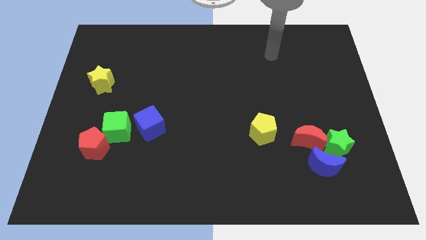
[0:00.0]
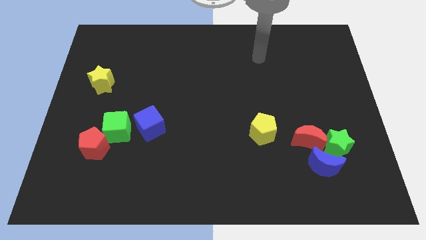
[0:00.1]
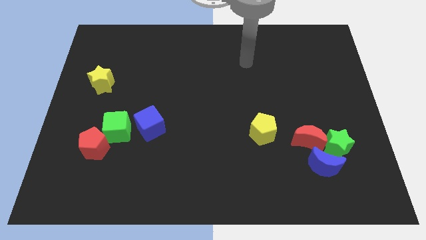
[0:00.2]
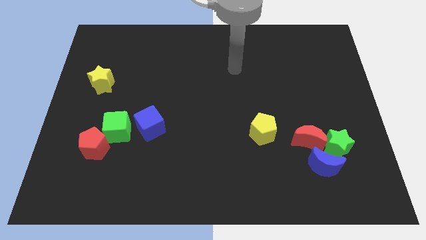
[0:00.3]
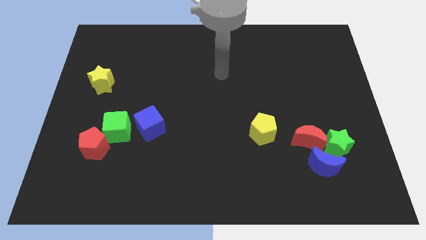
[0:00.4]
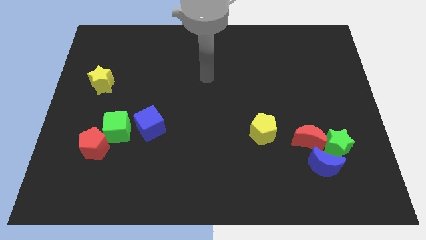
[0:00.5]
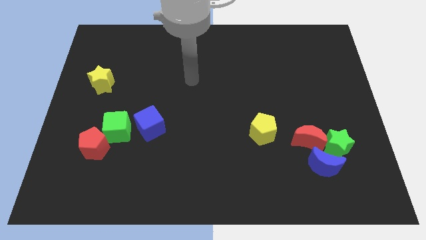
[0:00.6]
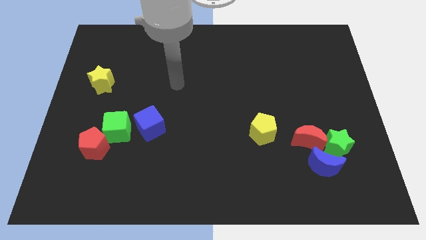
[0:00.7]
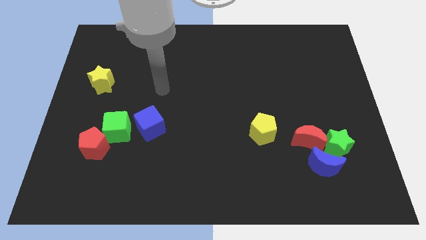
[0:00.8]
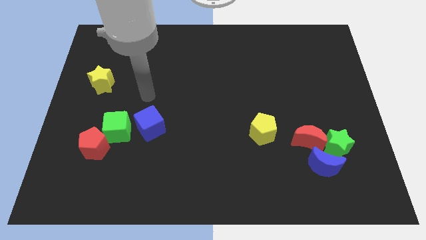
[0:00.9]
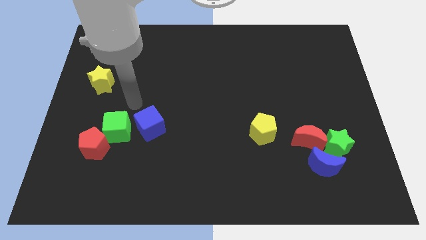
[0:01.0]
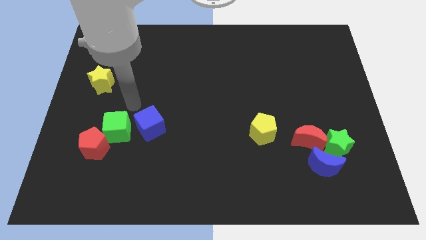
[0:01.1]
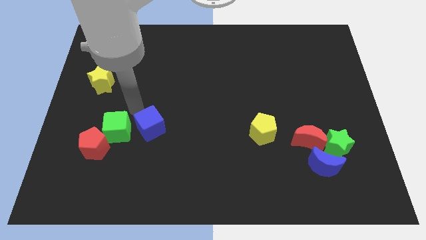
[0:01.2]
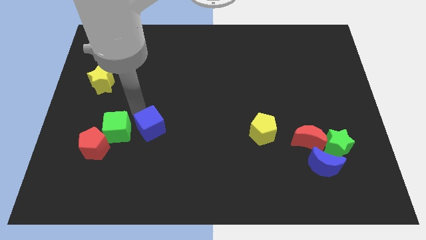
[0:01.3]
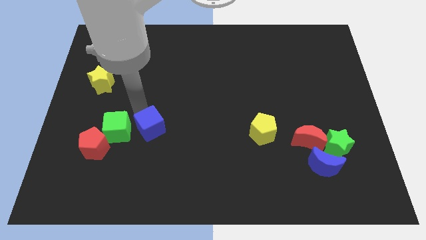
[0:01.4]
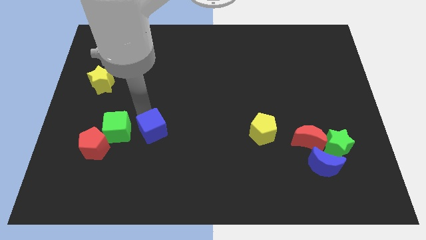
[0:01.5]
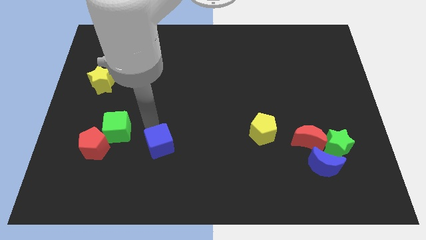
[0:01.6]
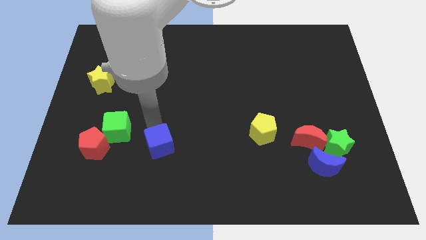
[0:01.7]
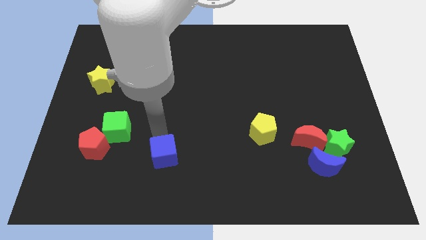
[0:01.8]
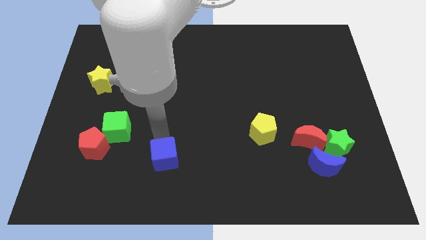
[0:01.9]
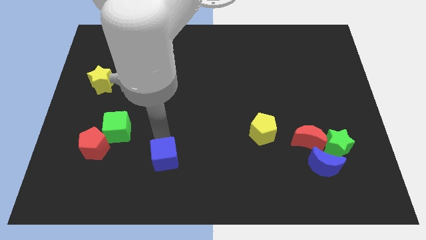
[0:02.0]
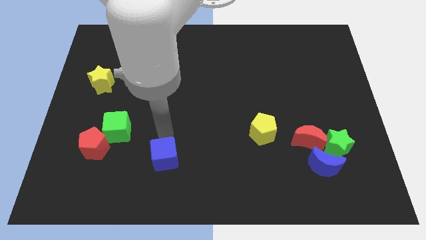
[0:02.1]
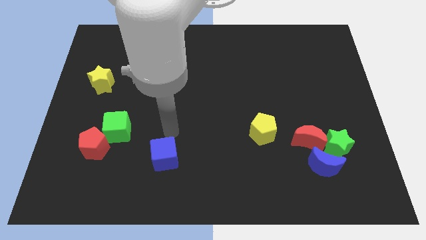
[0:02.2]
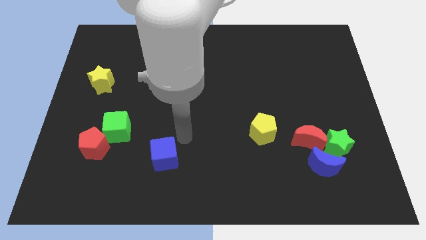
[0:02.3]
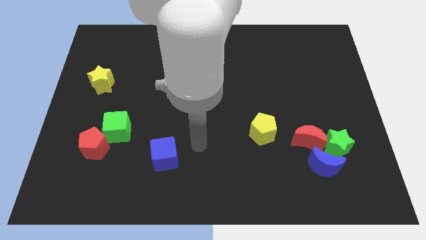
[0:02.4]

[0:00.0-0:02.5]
move the blue cube slightly downwards

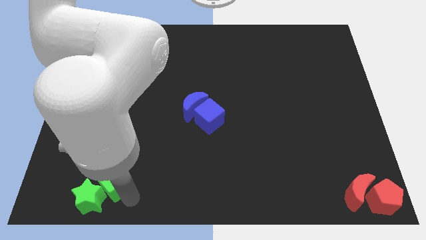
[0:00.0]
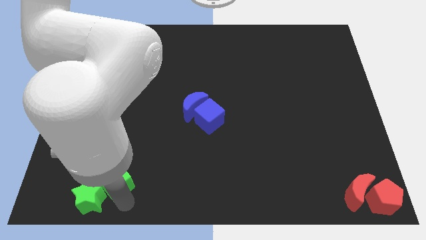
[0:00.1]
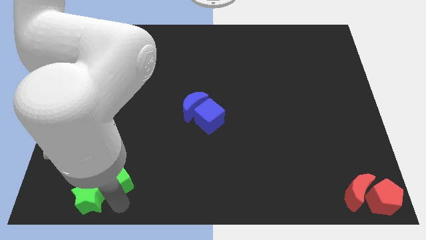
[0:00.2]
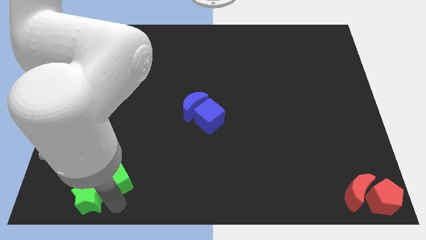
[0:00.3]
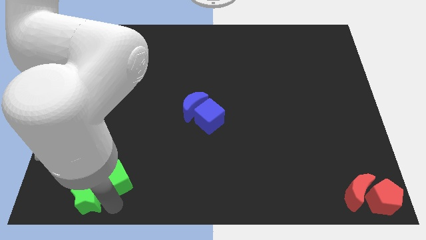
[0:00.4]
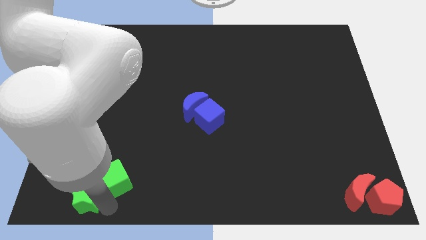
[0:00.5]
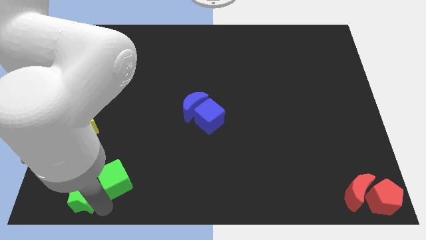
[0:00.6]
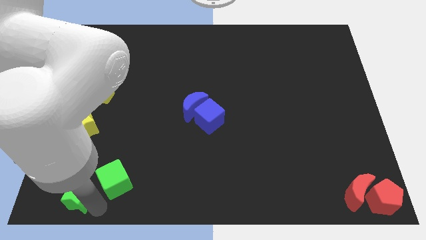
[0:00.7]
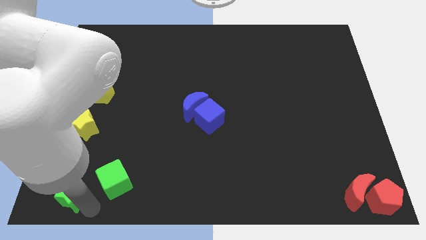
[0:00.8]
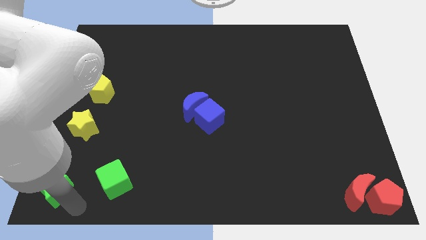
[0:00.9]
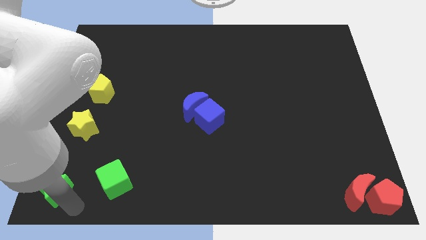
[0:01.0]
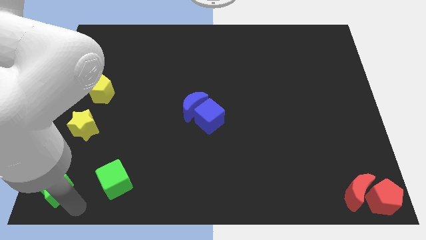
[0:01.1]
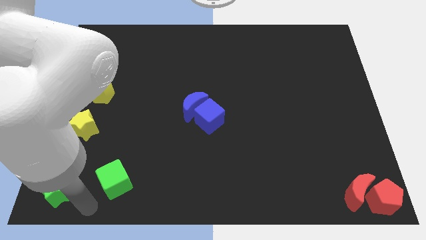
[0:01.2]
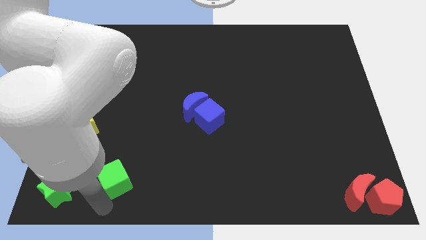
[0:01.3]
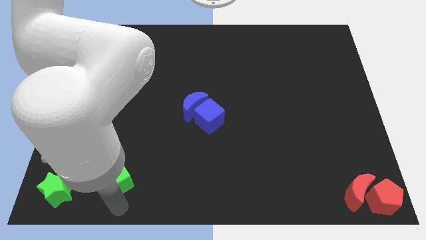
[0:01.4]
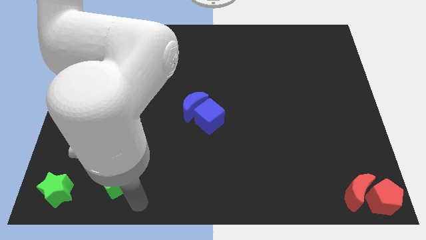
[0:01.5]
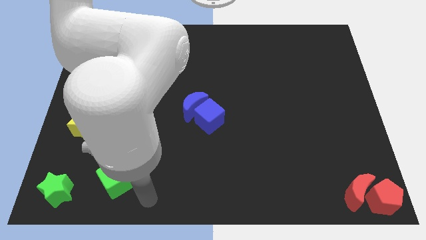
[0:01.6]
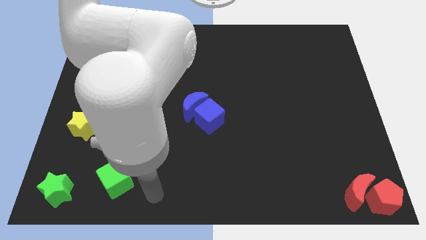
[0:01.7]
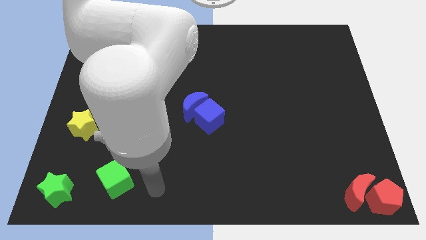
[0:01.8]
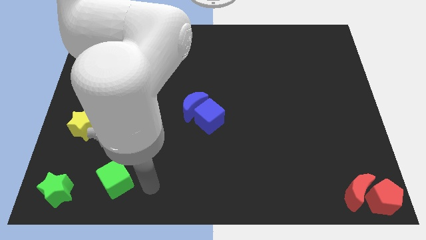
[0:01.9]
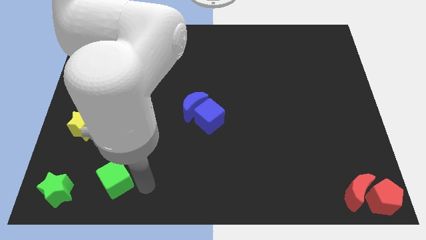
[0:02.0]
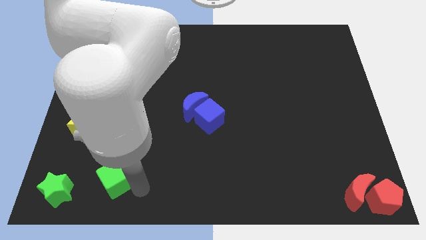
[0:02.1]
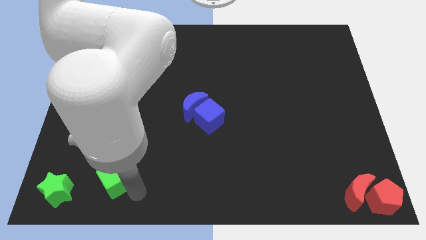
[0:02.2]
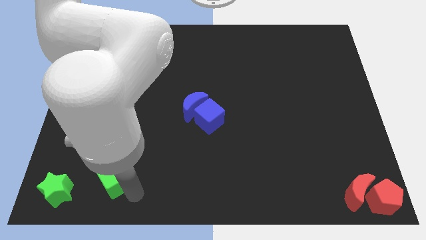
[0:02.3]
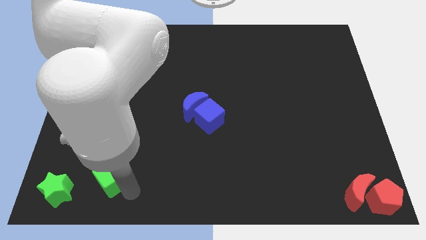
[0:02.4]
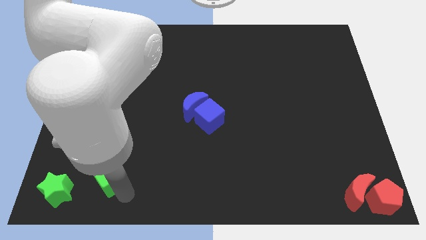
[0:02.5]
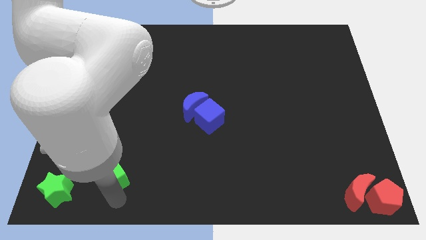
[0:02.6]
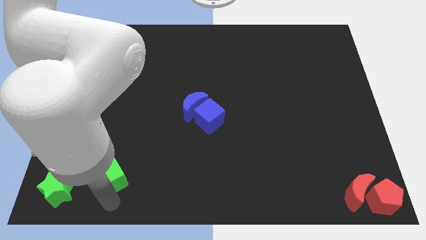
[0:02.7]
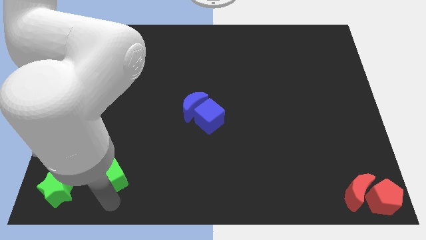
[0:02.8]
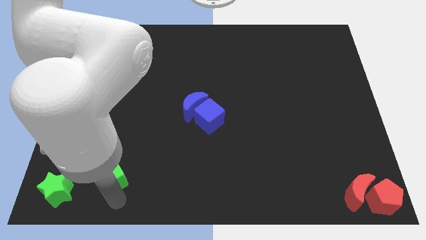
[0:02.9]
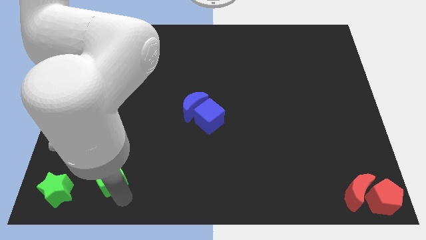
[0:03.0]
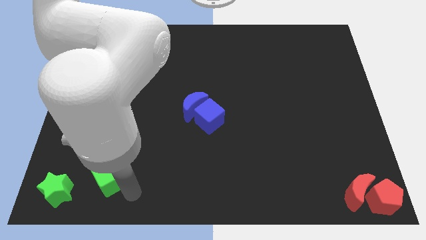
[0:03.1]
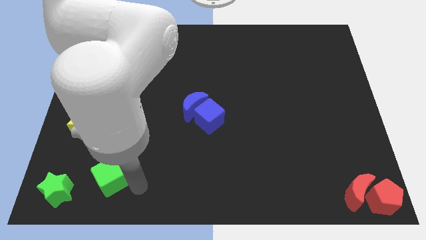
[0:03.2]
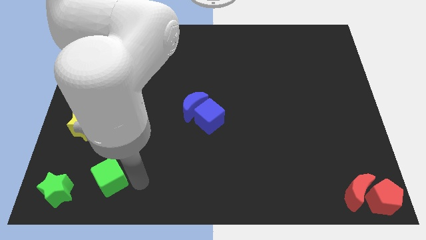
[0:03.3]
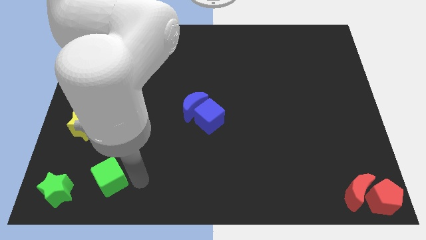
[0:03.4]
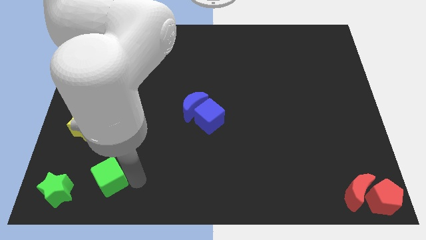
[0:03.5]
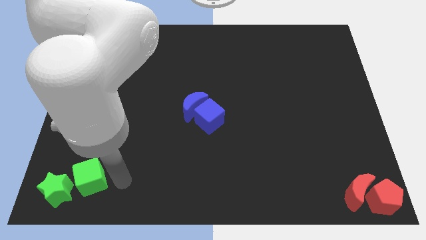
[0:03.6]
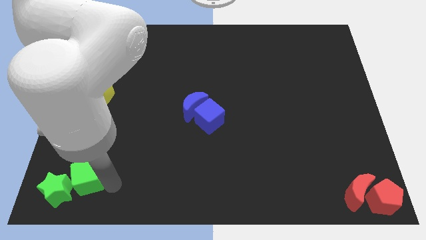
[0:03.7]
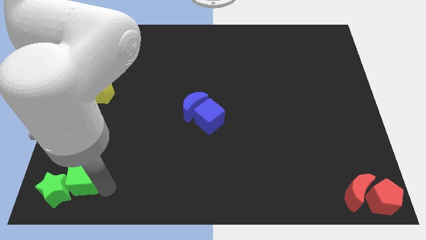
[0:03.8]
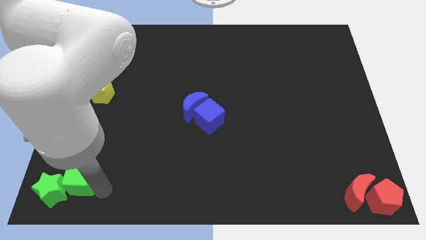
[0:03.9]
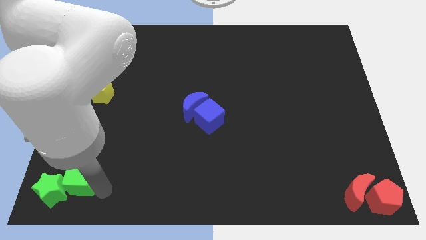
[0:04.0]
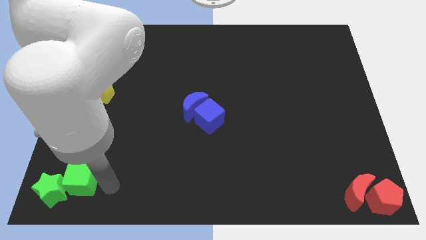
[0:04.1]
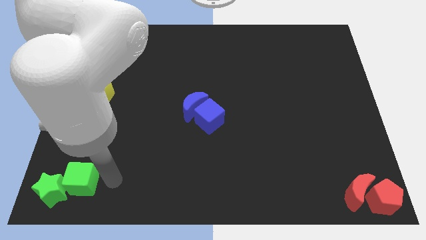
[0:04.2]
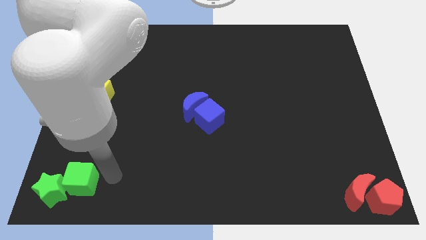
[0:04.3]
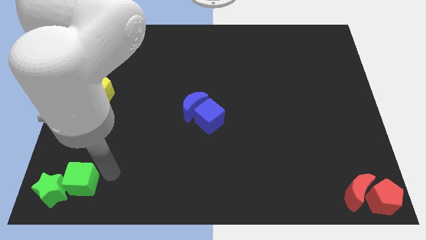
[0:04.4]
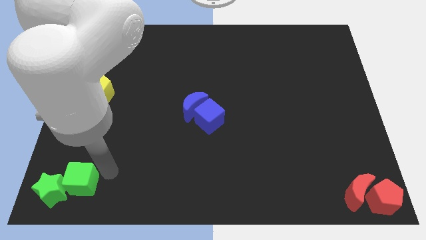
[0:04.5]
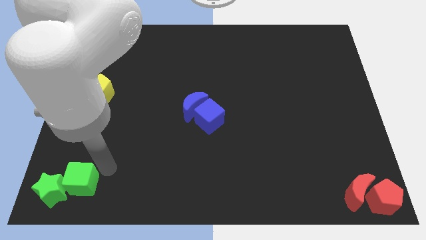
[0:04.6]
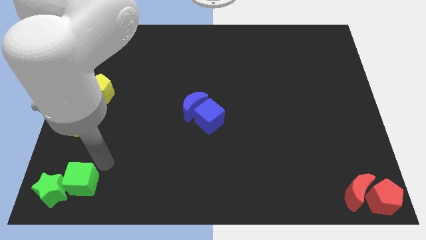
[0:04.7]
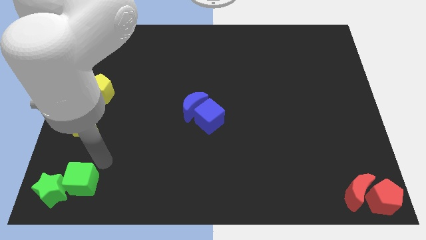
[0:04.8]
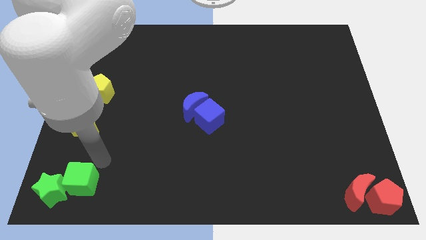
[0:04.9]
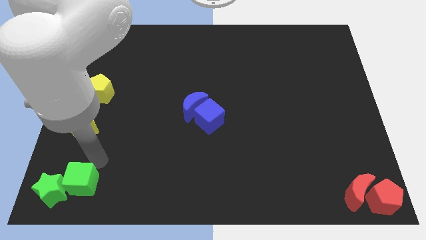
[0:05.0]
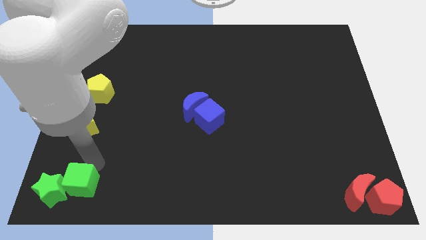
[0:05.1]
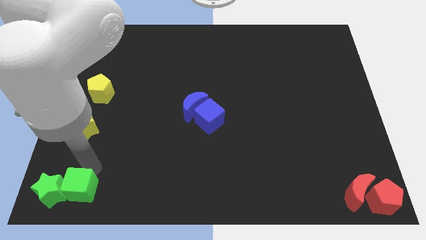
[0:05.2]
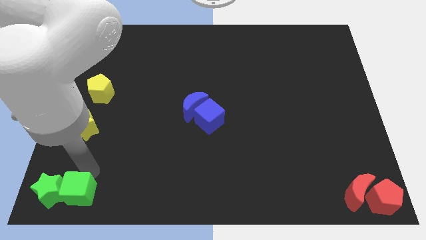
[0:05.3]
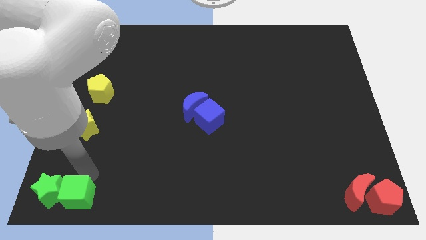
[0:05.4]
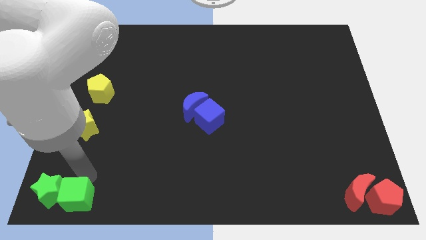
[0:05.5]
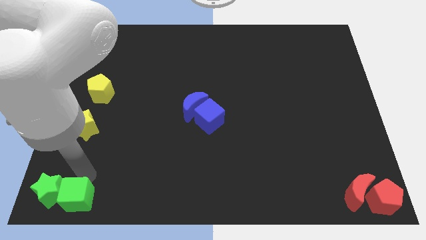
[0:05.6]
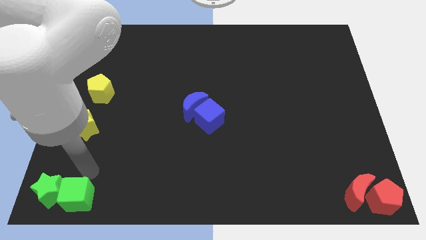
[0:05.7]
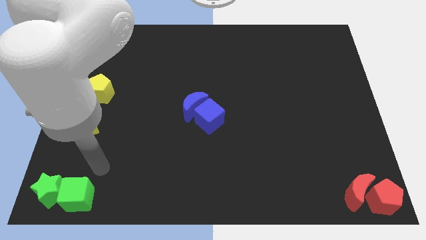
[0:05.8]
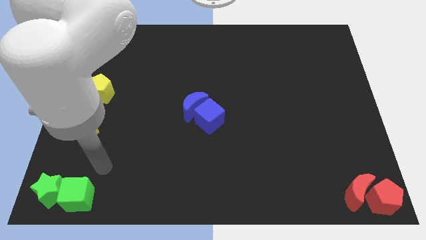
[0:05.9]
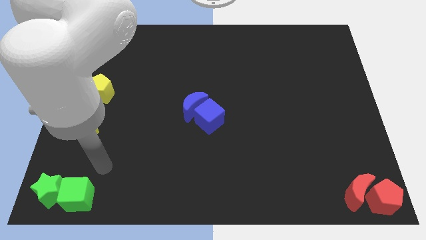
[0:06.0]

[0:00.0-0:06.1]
place the green blocks together at the bottom left corner of the board

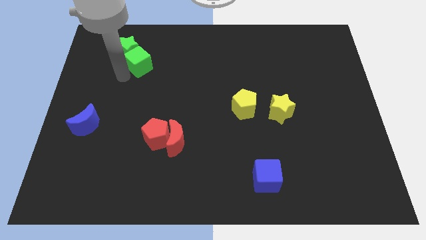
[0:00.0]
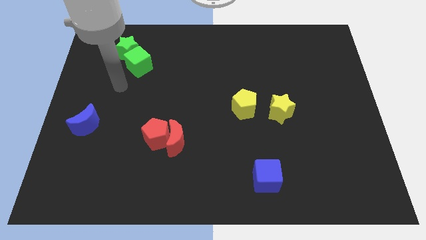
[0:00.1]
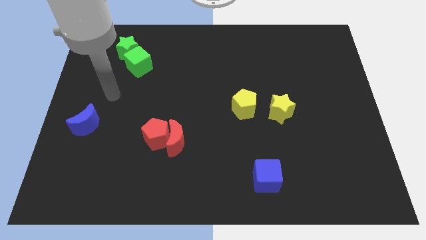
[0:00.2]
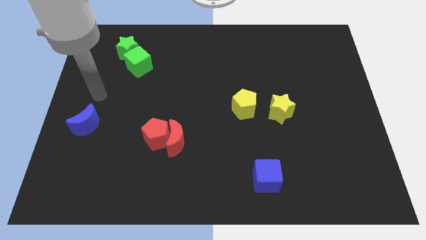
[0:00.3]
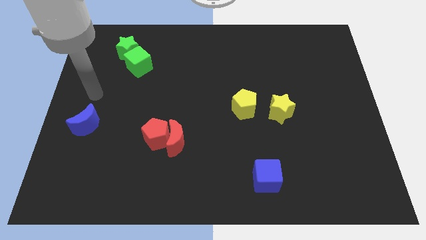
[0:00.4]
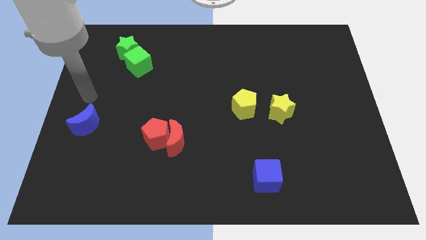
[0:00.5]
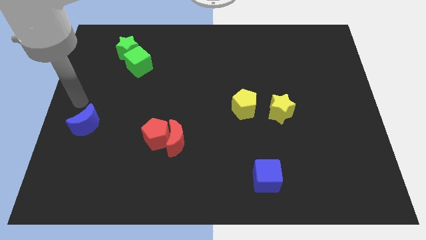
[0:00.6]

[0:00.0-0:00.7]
move away from the green cube
